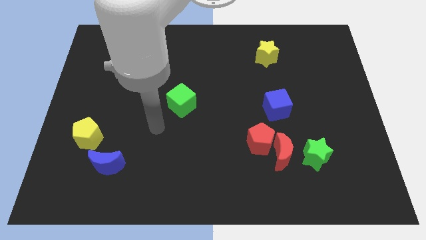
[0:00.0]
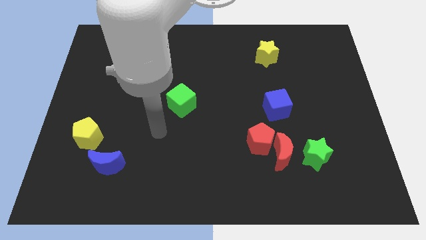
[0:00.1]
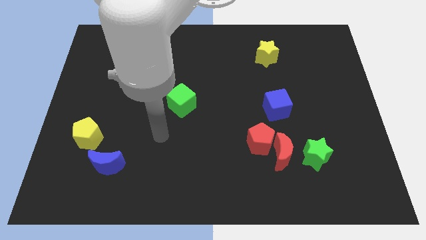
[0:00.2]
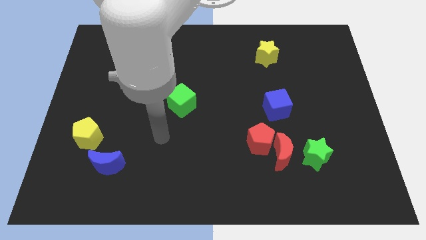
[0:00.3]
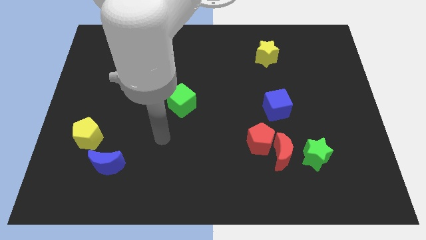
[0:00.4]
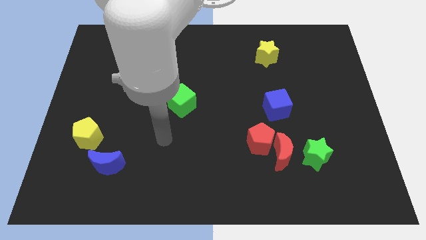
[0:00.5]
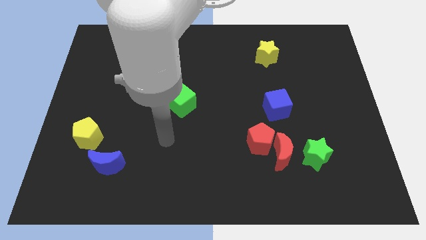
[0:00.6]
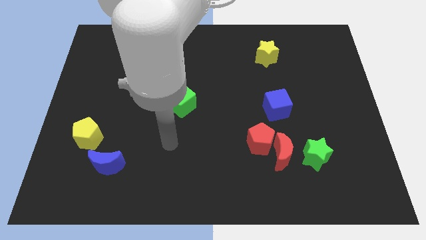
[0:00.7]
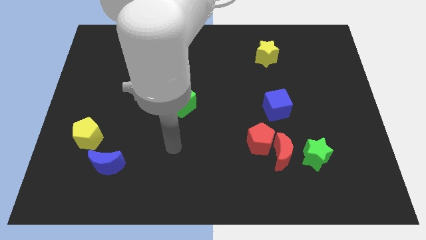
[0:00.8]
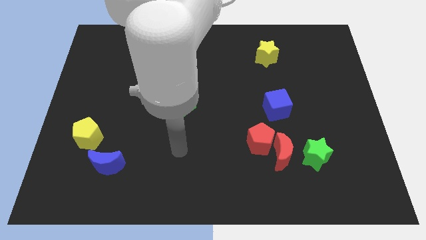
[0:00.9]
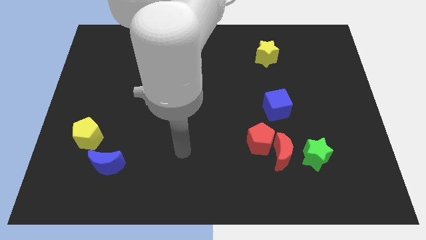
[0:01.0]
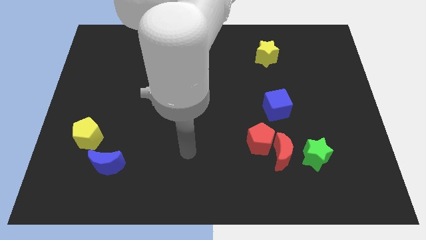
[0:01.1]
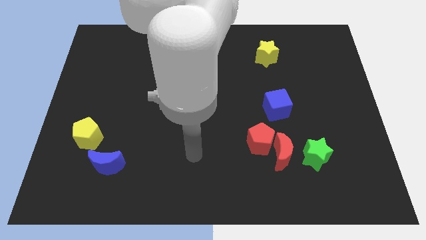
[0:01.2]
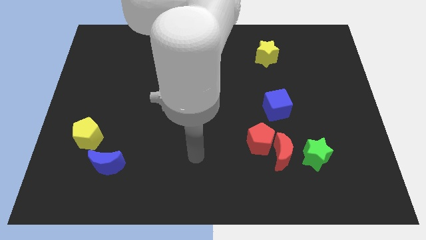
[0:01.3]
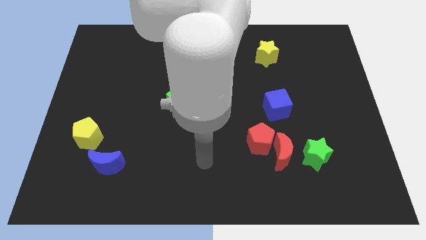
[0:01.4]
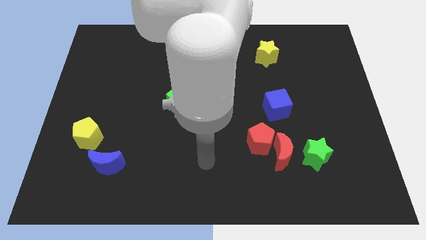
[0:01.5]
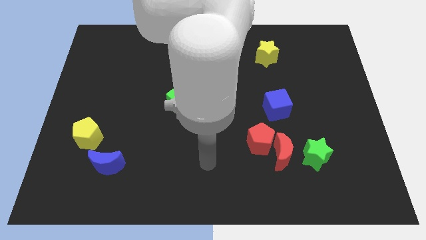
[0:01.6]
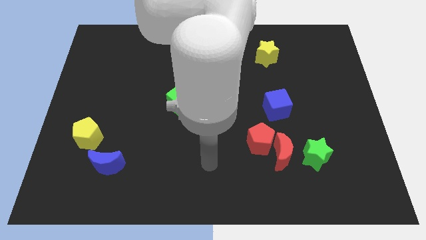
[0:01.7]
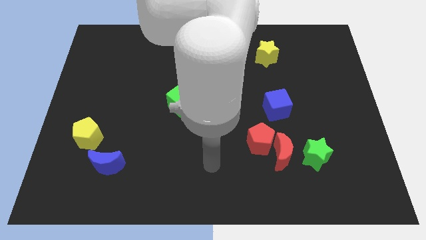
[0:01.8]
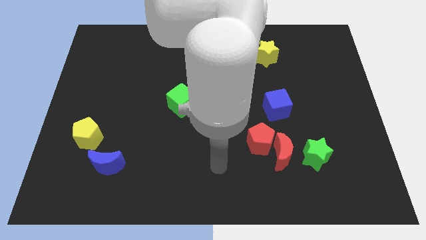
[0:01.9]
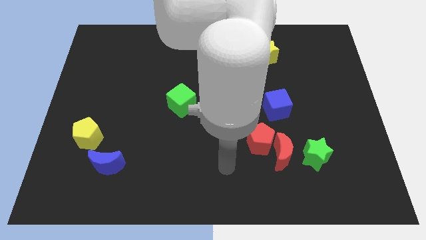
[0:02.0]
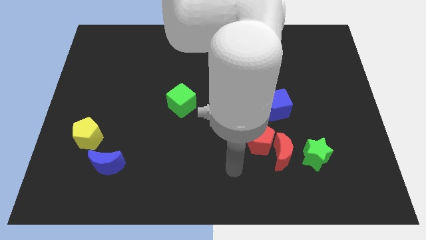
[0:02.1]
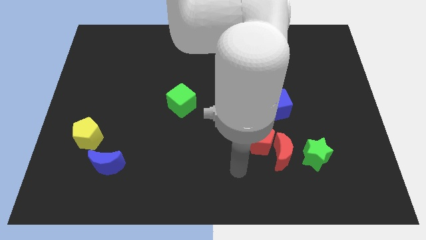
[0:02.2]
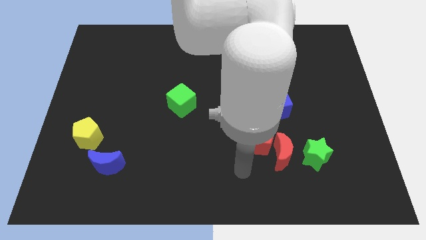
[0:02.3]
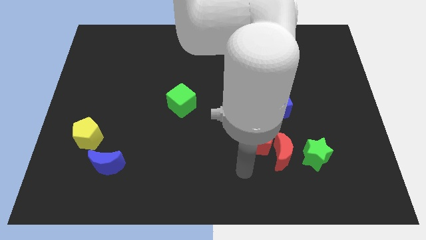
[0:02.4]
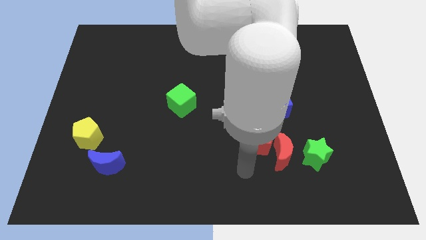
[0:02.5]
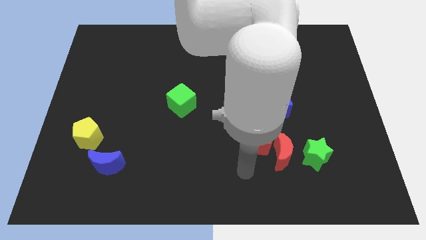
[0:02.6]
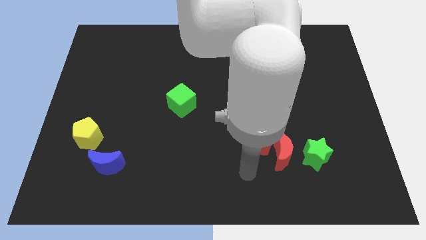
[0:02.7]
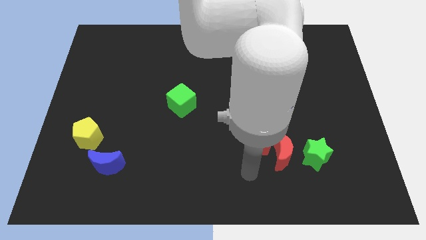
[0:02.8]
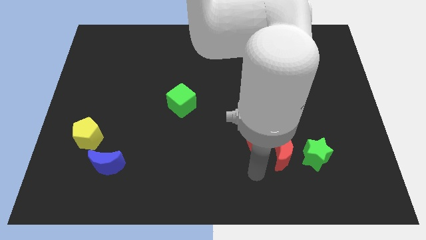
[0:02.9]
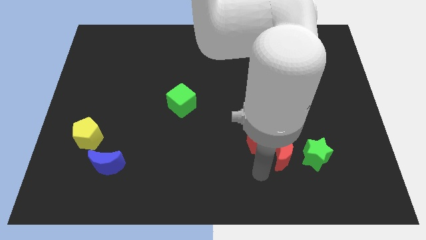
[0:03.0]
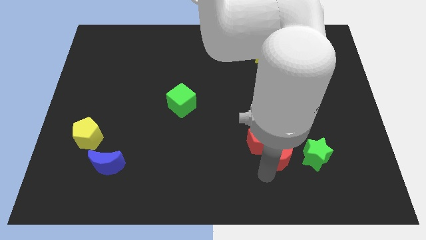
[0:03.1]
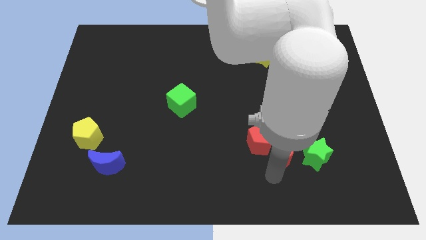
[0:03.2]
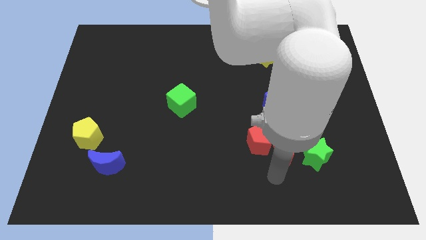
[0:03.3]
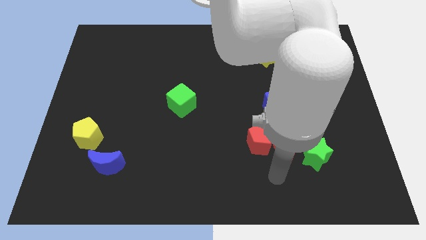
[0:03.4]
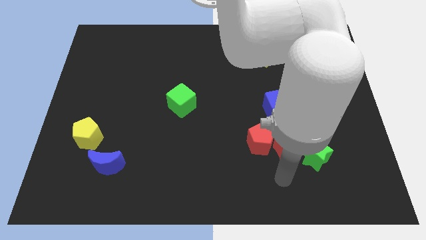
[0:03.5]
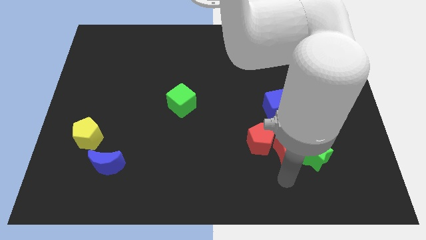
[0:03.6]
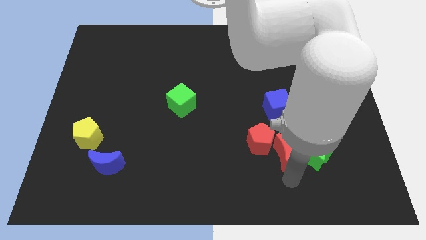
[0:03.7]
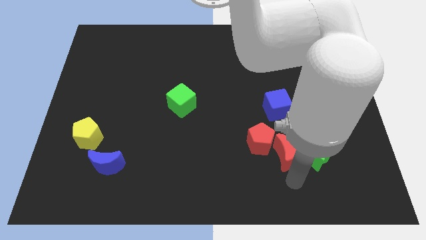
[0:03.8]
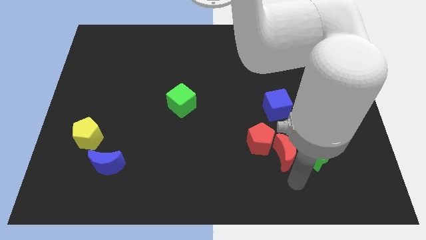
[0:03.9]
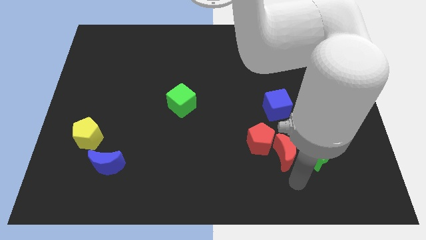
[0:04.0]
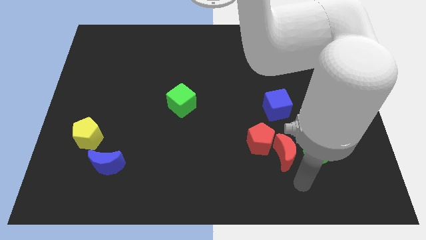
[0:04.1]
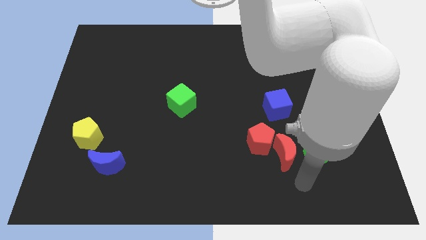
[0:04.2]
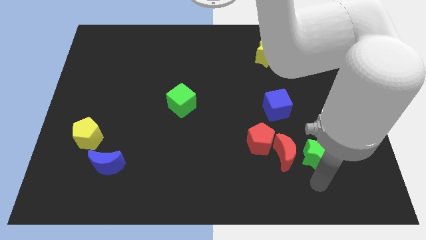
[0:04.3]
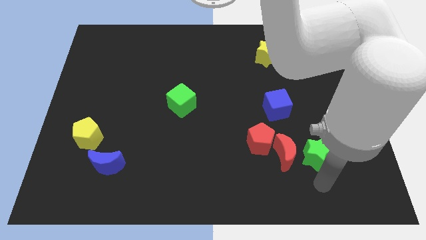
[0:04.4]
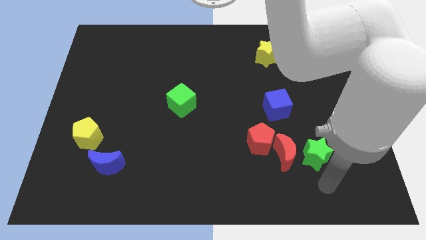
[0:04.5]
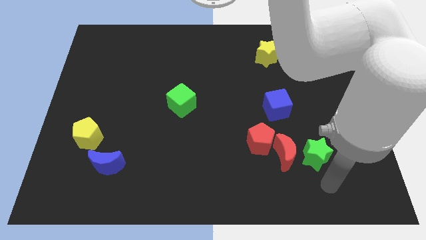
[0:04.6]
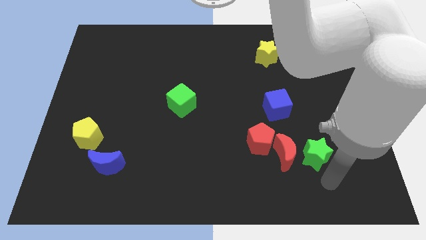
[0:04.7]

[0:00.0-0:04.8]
push your arm to the bottom of green star

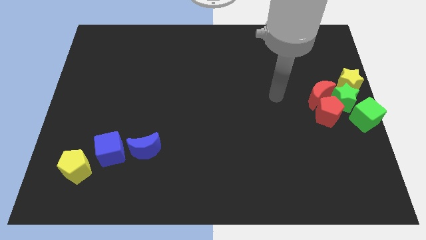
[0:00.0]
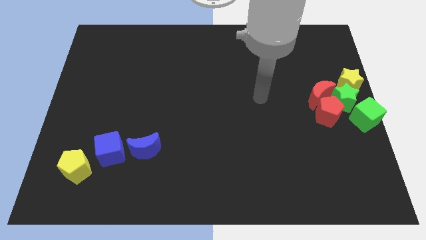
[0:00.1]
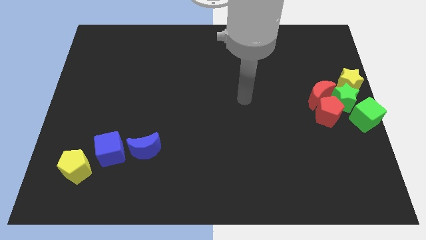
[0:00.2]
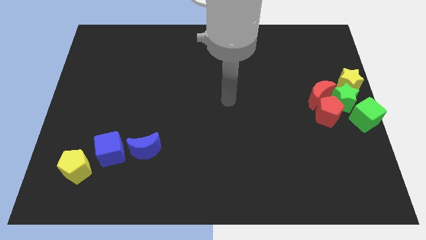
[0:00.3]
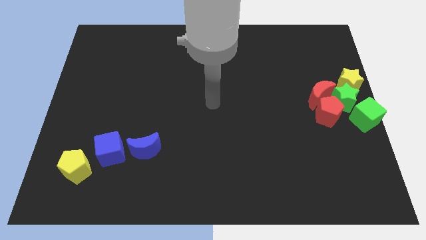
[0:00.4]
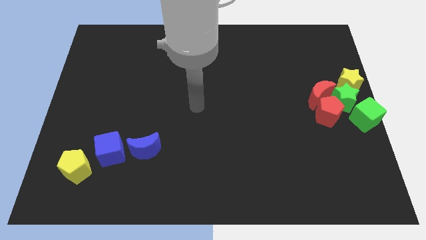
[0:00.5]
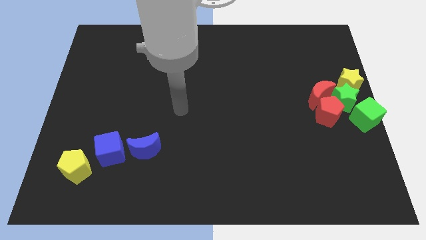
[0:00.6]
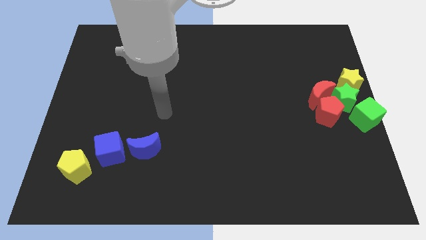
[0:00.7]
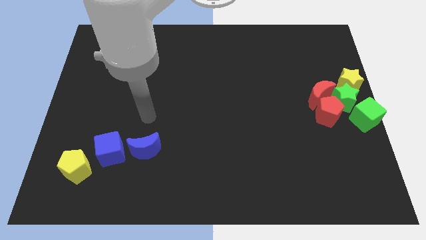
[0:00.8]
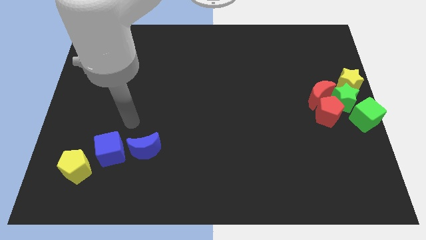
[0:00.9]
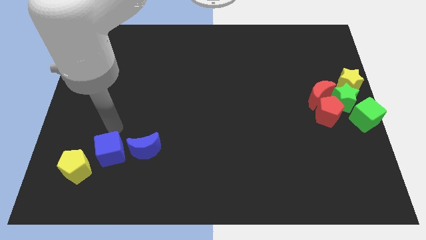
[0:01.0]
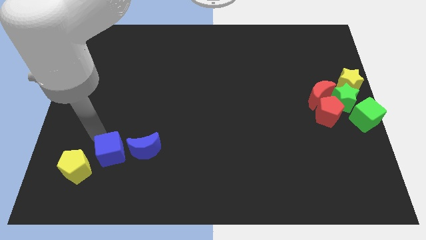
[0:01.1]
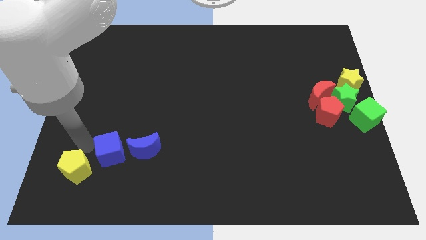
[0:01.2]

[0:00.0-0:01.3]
place your arm at the top of the yellow pentagon

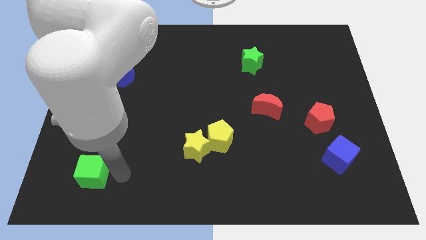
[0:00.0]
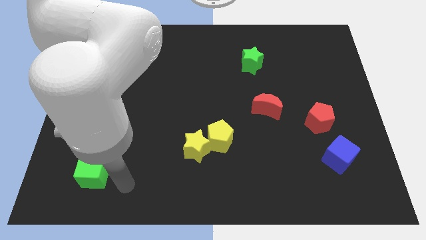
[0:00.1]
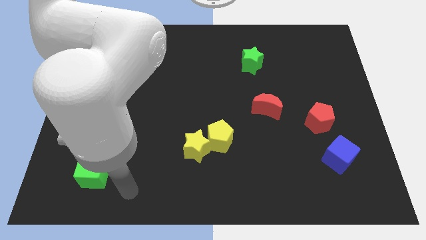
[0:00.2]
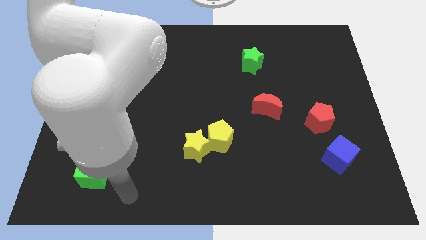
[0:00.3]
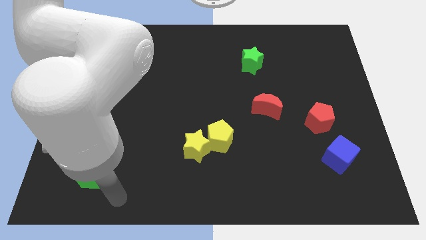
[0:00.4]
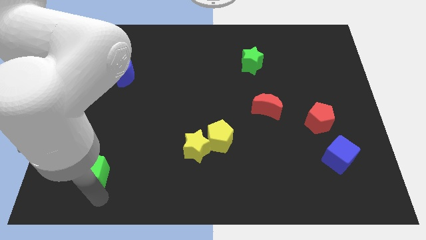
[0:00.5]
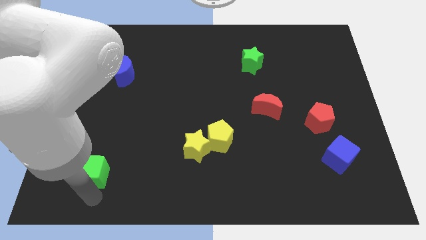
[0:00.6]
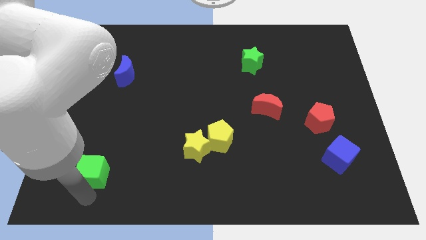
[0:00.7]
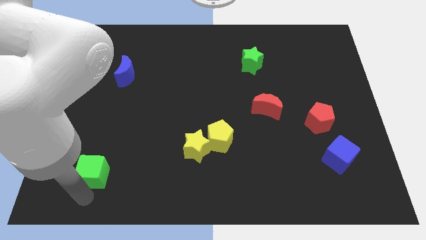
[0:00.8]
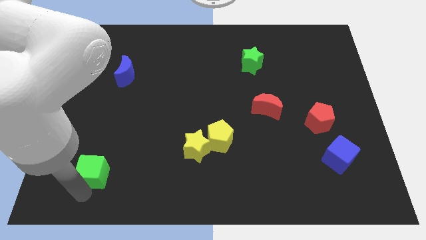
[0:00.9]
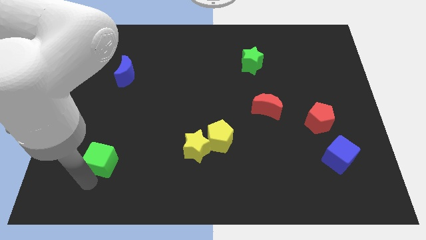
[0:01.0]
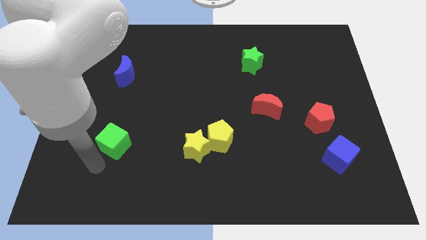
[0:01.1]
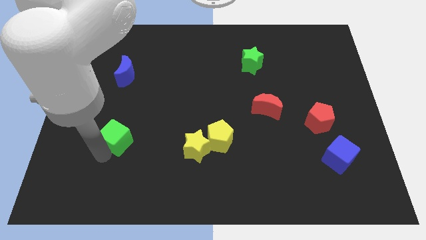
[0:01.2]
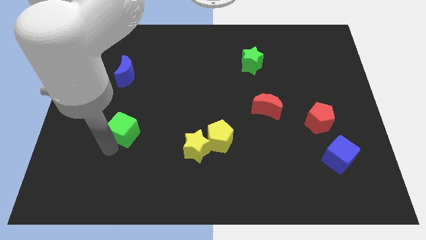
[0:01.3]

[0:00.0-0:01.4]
move green cube to the left of yellow star

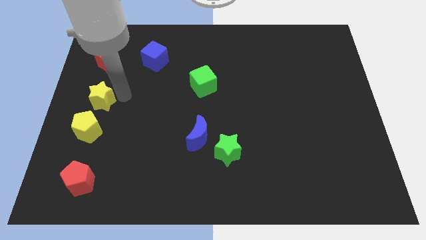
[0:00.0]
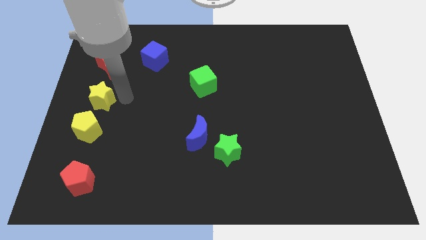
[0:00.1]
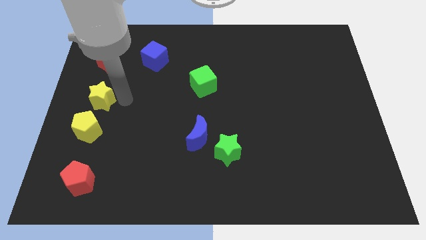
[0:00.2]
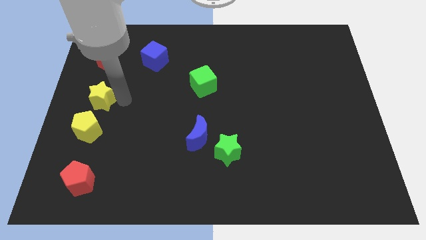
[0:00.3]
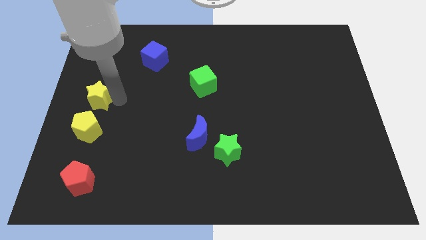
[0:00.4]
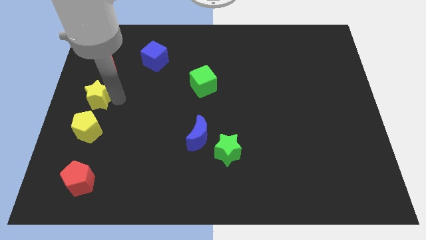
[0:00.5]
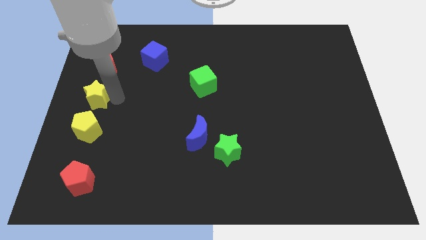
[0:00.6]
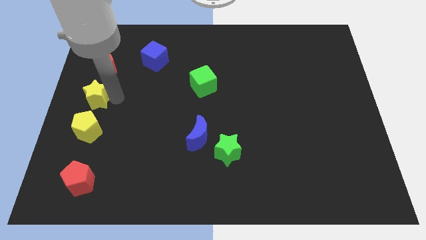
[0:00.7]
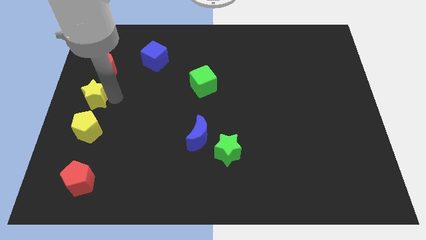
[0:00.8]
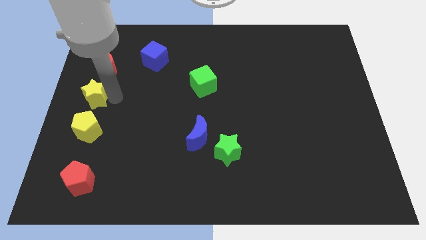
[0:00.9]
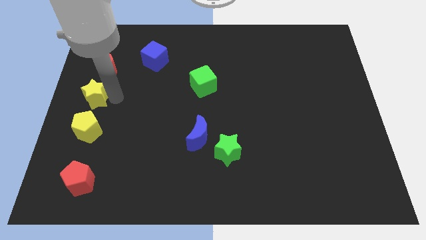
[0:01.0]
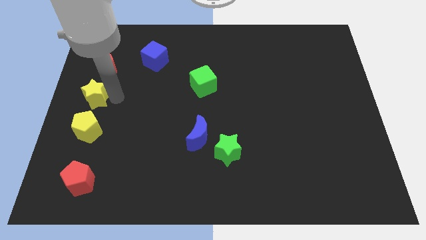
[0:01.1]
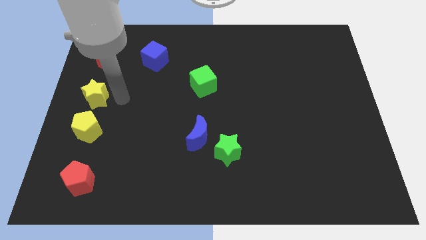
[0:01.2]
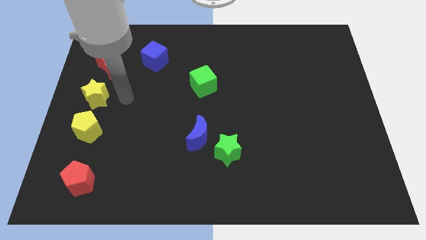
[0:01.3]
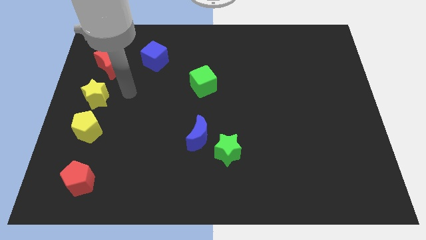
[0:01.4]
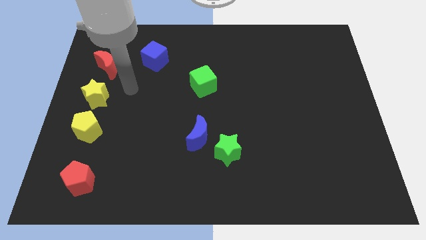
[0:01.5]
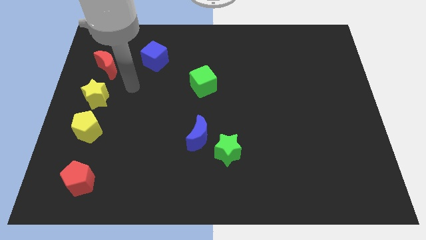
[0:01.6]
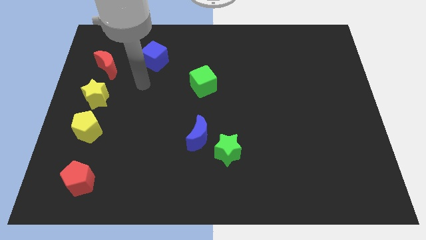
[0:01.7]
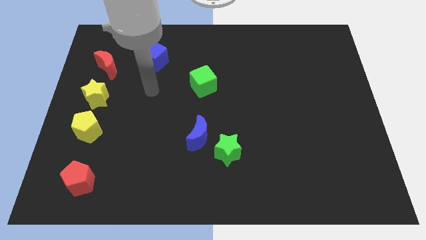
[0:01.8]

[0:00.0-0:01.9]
move your arm below the blue cube
